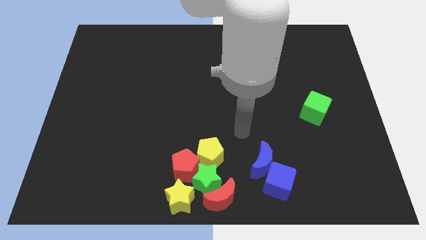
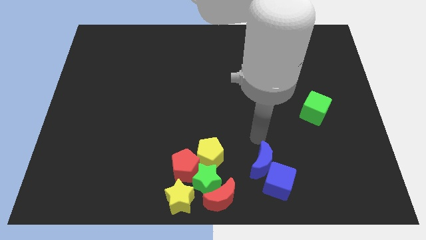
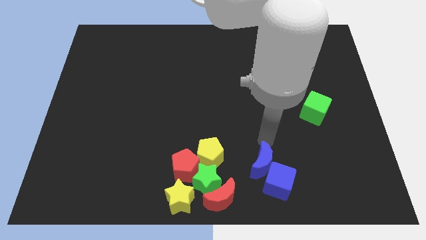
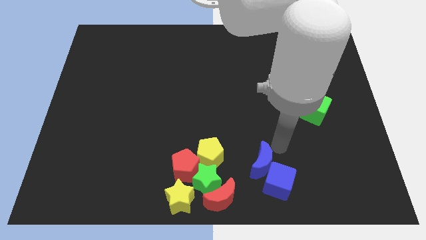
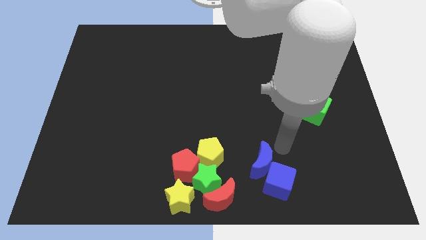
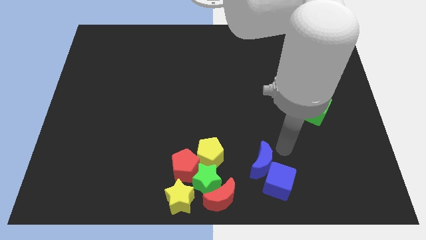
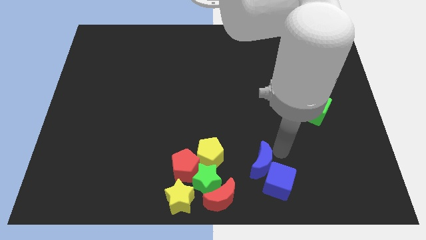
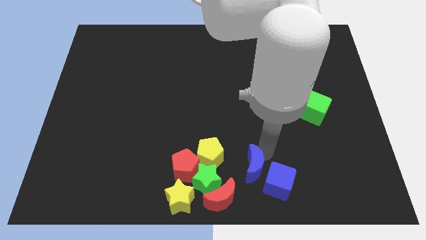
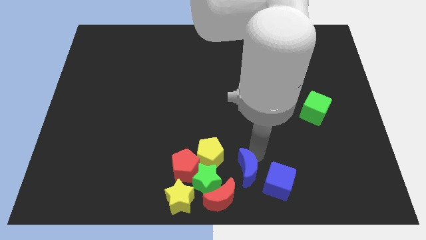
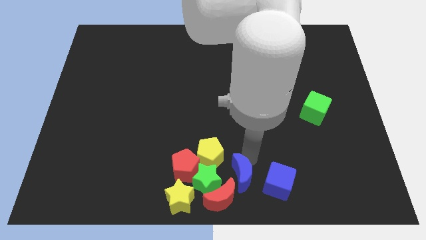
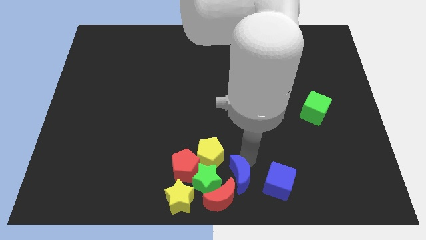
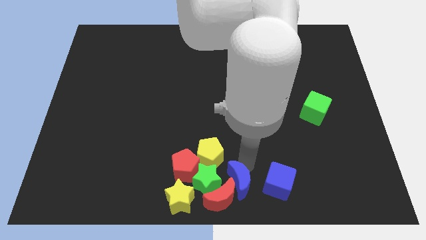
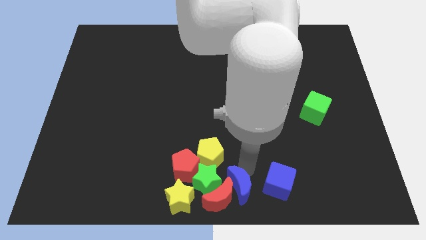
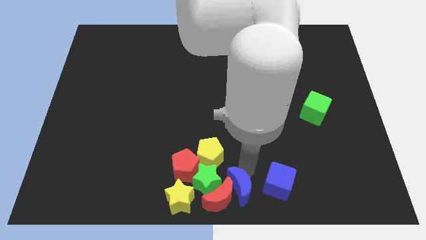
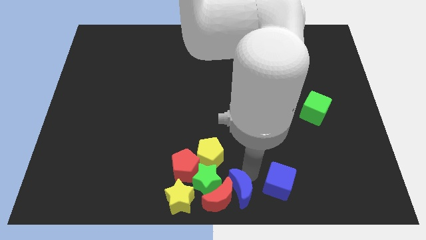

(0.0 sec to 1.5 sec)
push the blue crescent into the red crescent

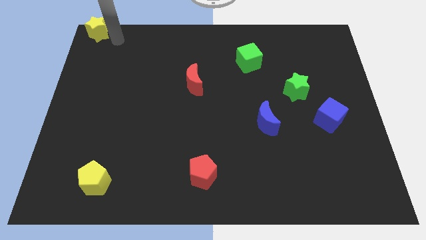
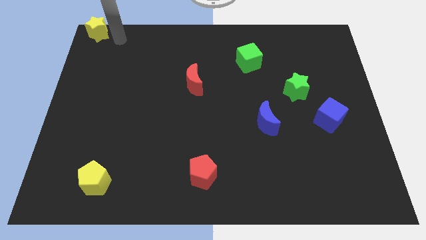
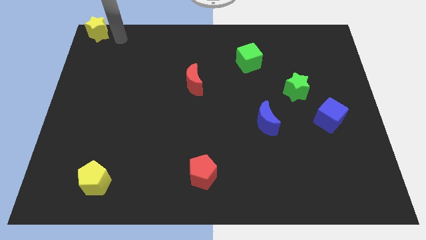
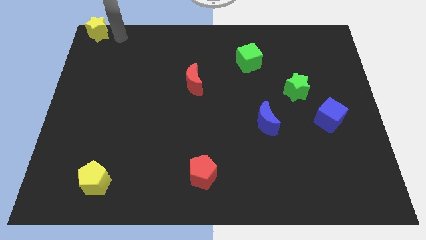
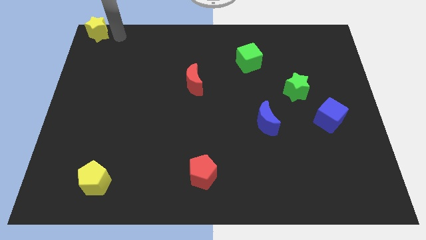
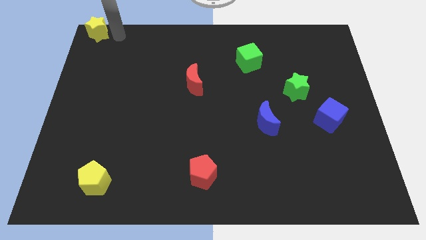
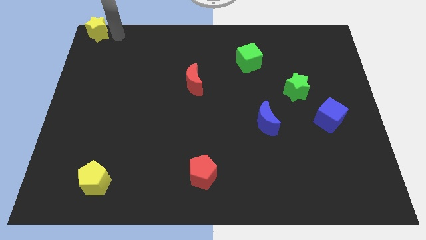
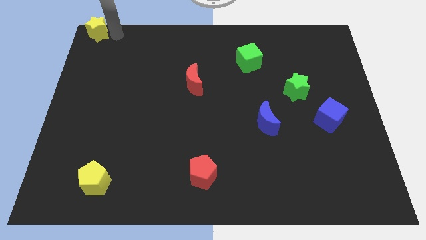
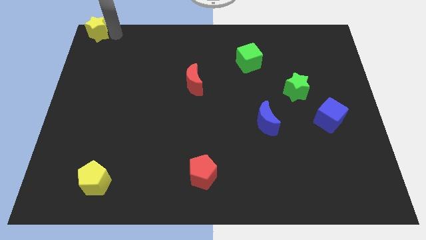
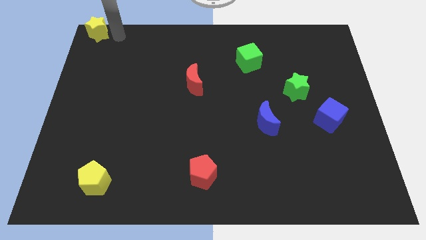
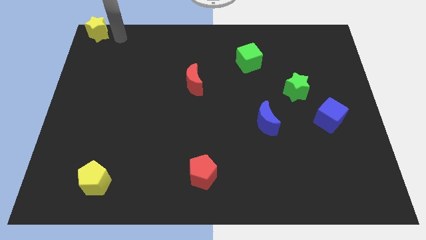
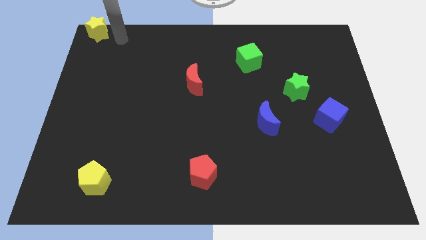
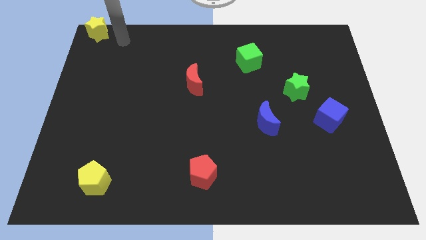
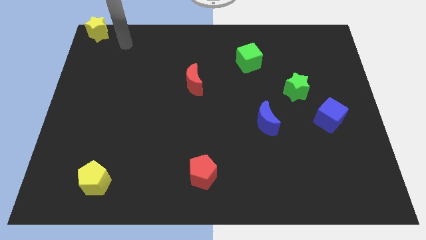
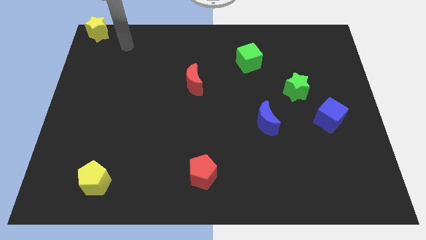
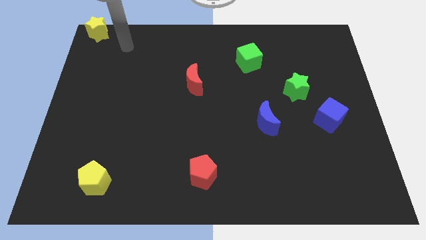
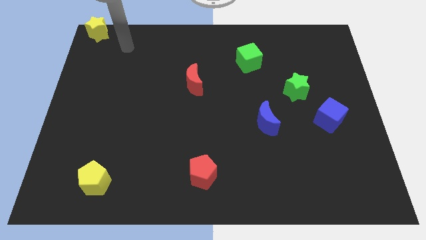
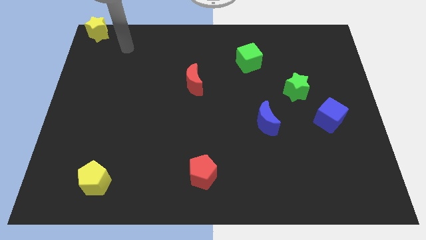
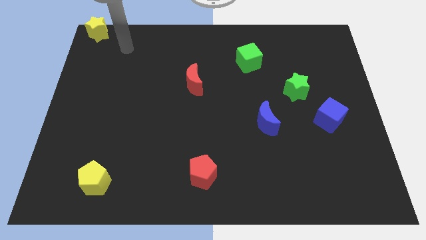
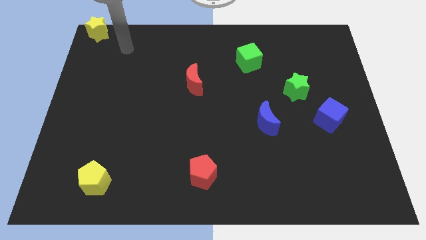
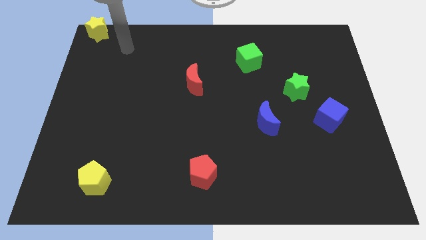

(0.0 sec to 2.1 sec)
move away your arm from the yellow star

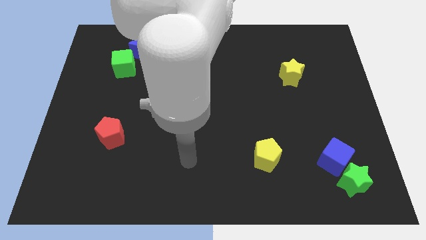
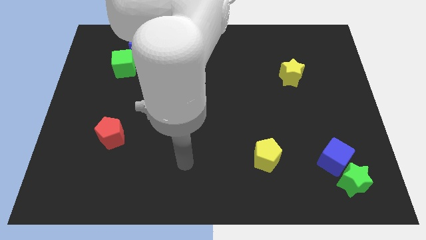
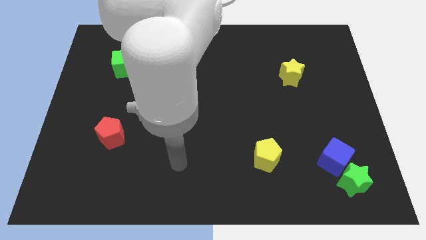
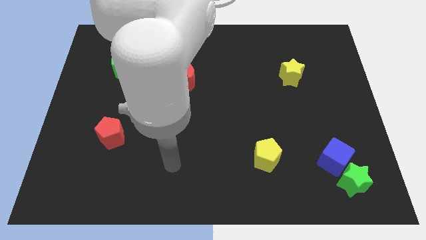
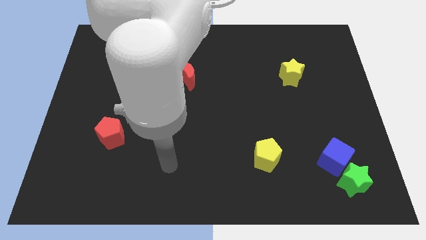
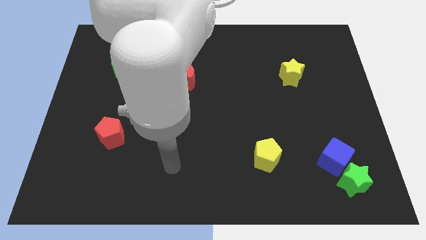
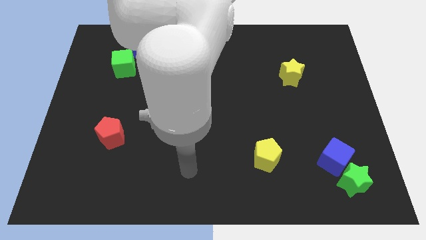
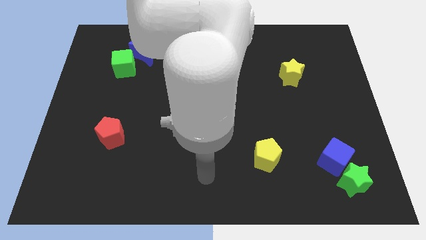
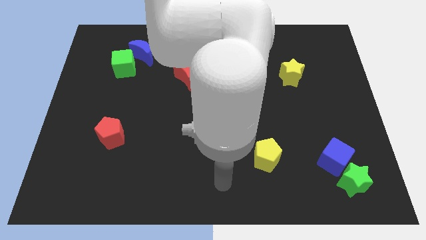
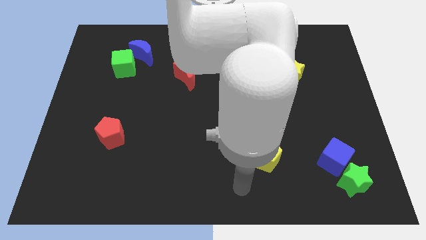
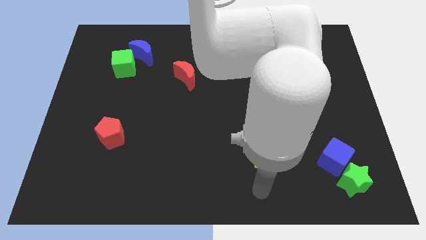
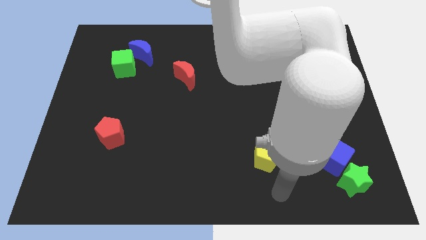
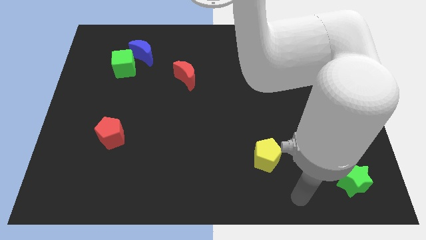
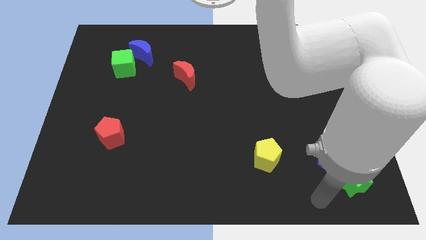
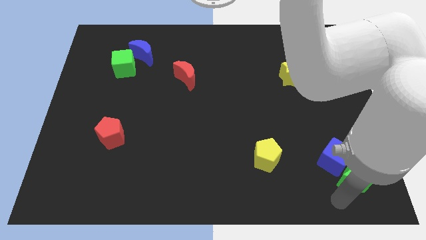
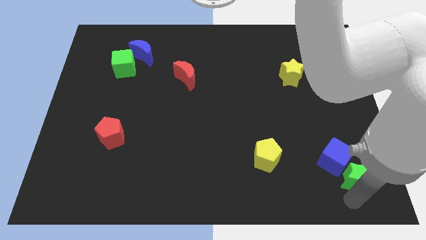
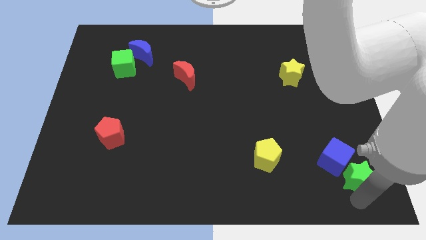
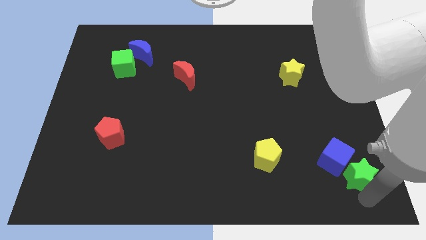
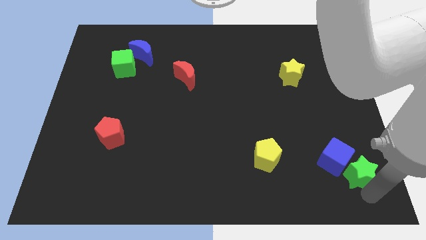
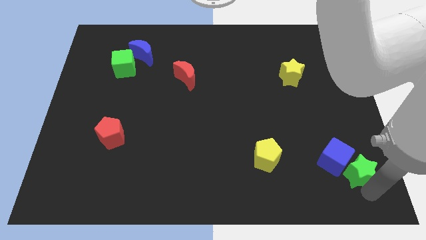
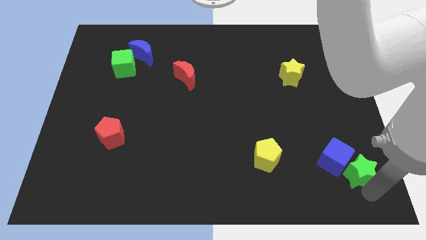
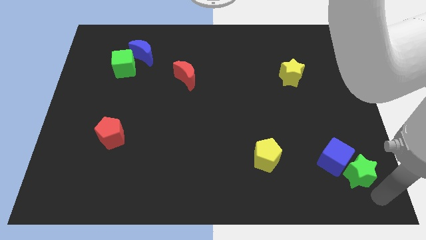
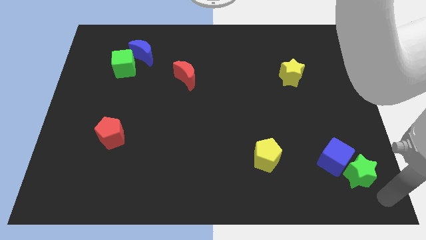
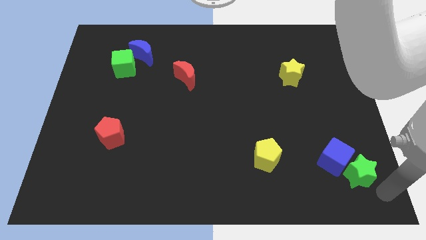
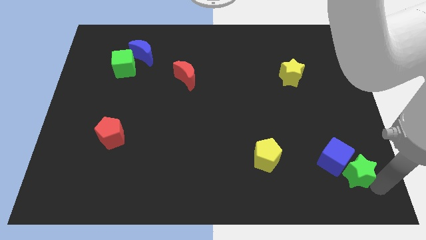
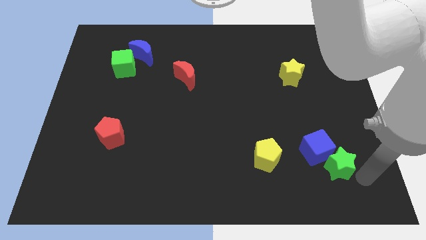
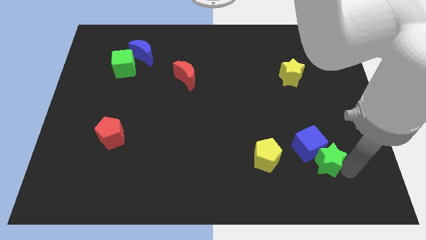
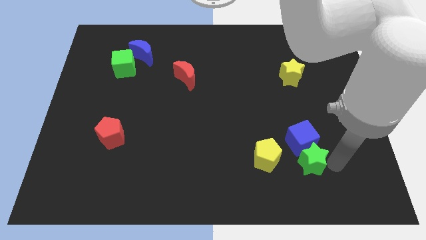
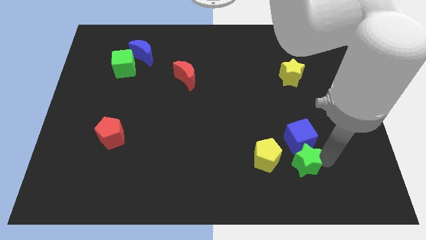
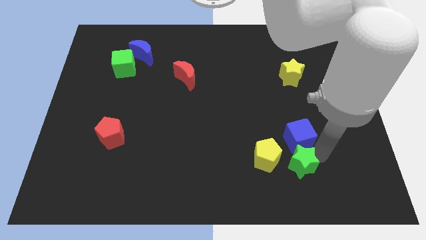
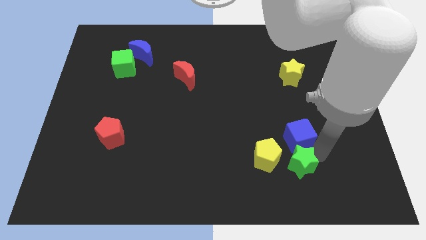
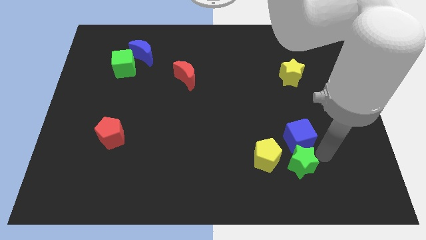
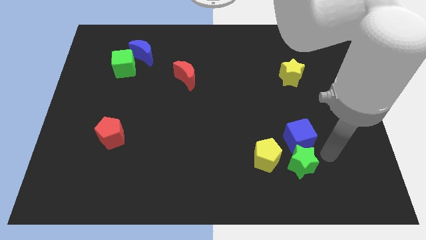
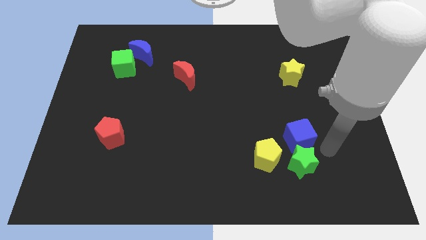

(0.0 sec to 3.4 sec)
push the green star to the right side of the yellow pentagon

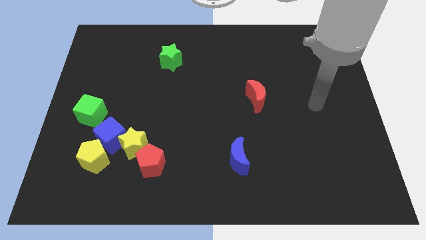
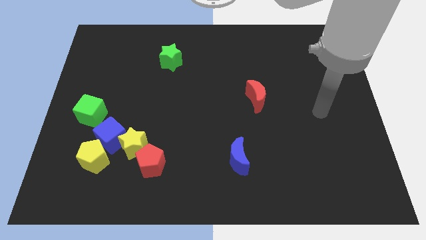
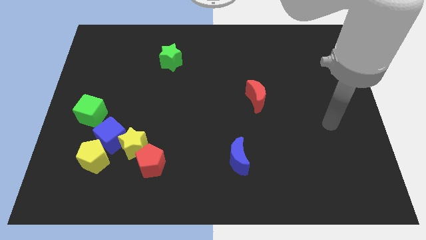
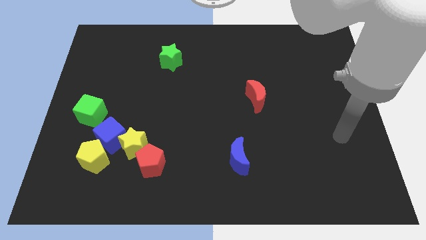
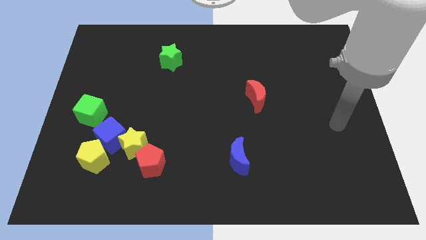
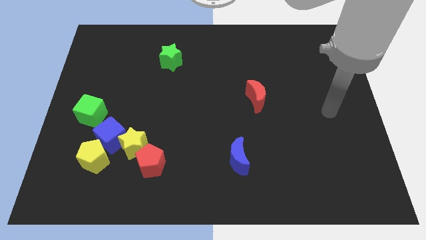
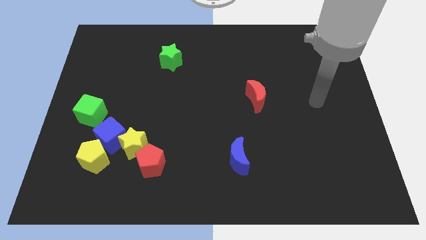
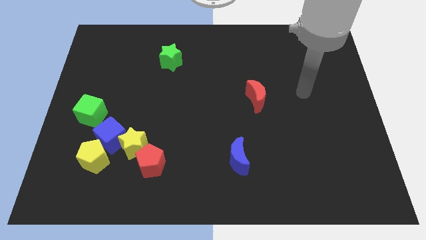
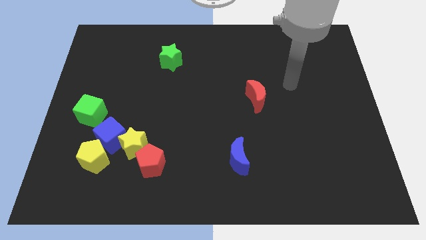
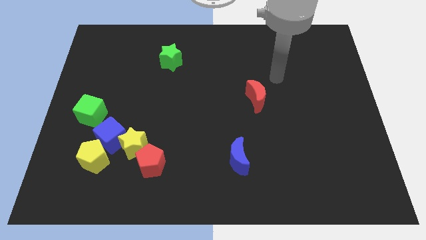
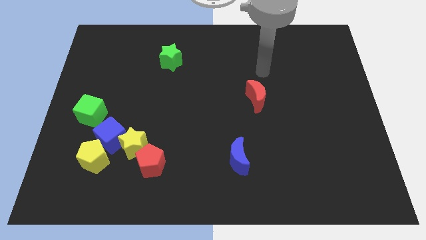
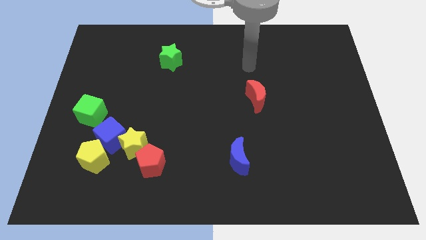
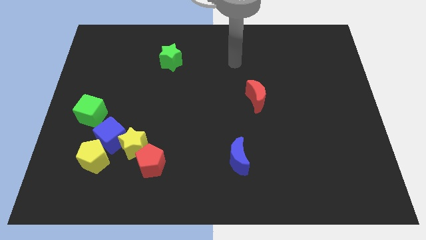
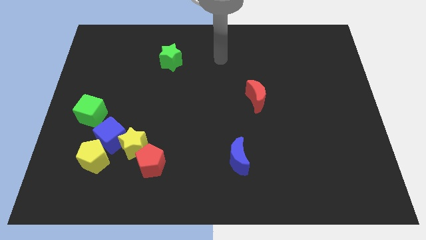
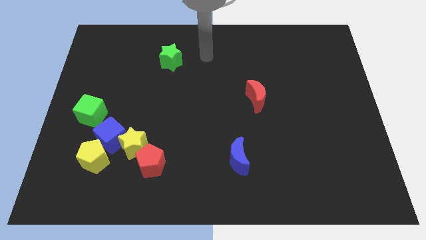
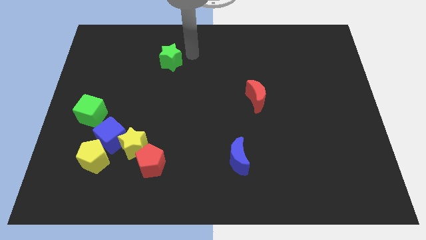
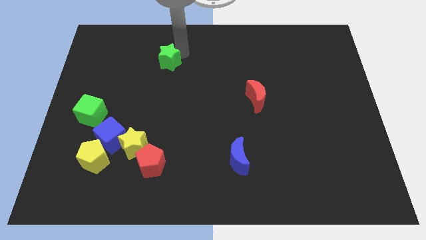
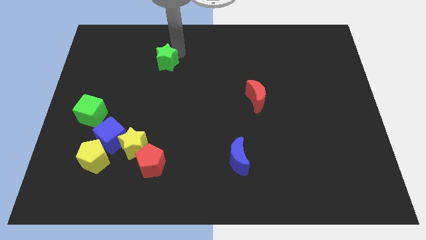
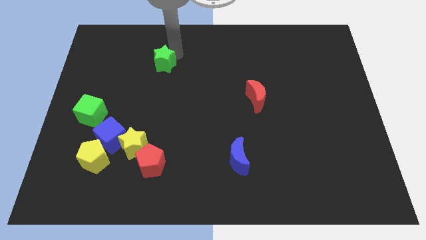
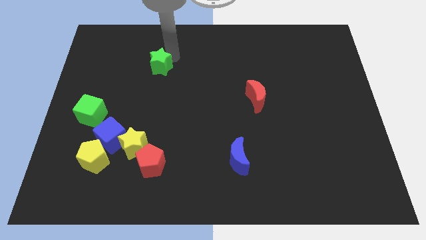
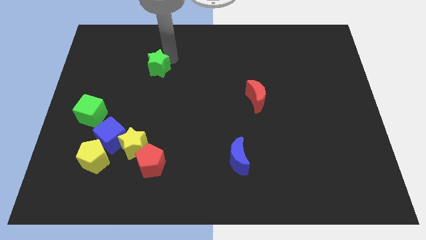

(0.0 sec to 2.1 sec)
push the green star slightly down
